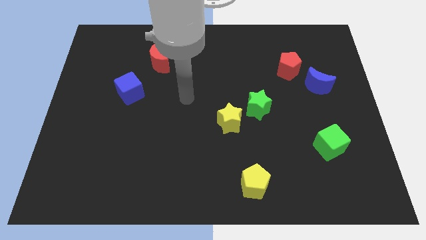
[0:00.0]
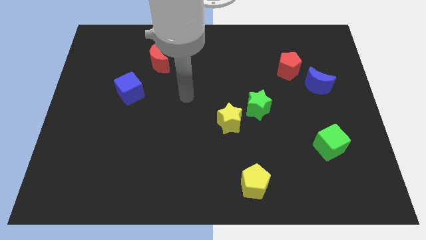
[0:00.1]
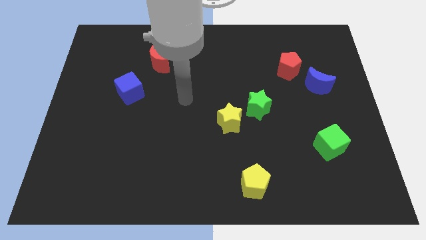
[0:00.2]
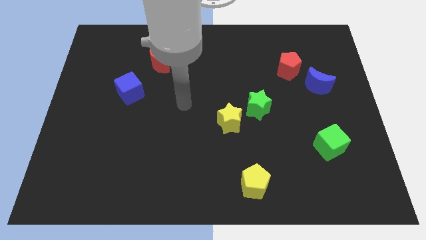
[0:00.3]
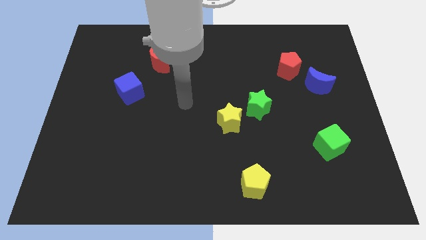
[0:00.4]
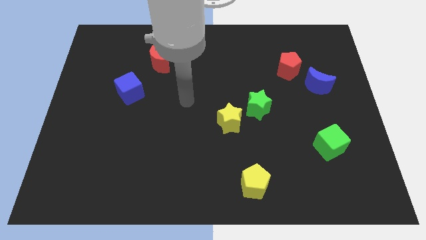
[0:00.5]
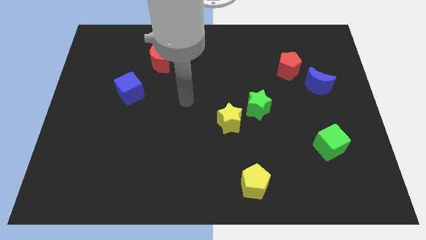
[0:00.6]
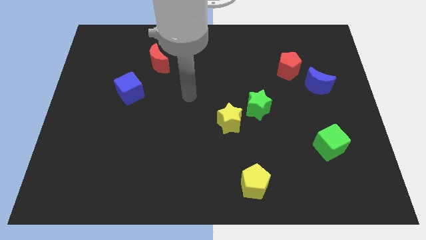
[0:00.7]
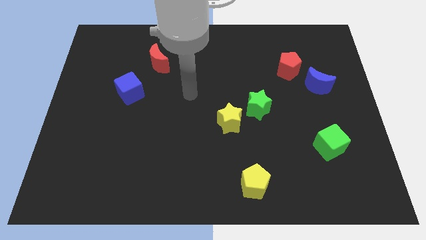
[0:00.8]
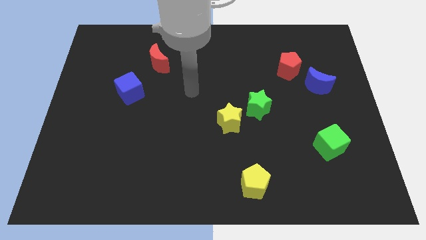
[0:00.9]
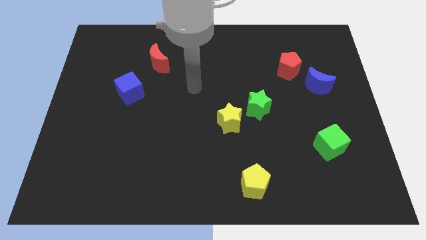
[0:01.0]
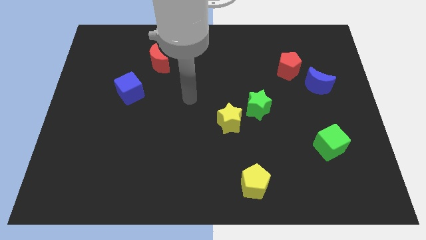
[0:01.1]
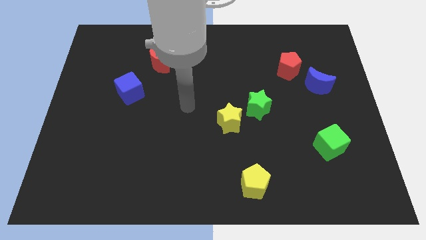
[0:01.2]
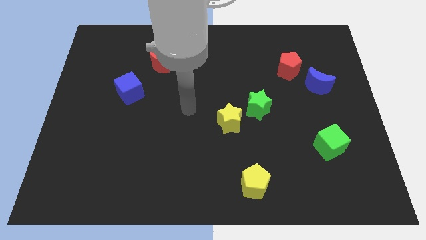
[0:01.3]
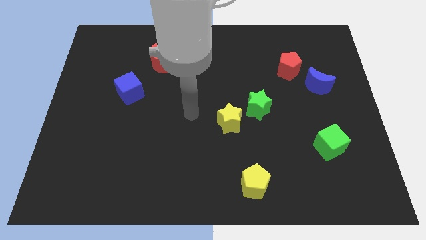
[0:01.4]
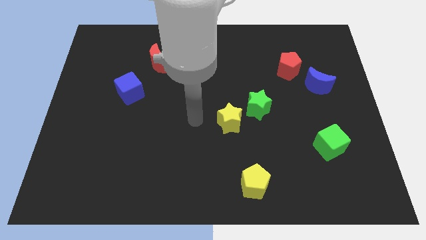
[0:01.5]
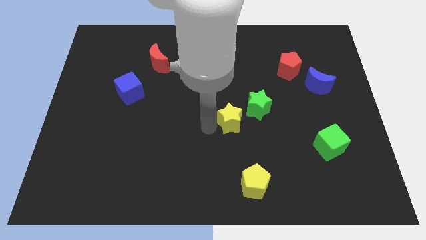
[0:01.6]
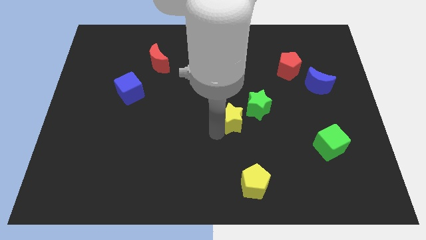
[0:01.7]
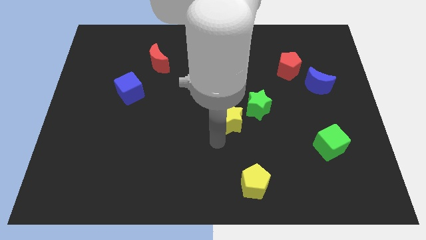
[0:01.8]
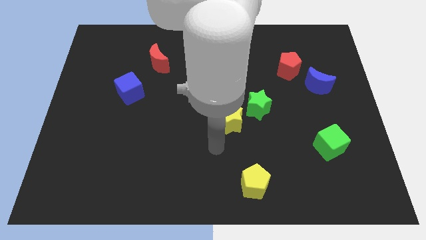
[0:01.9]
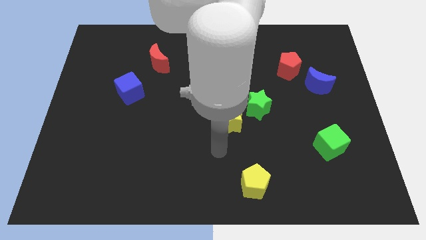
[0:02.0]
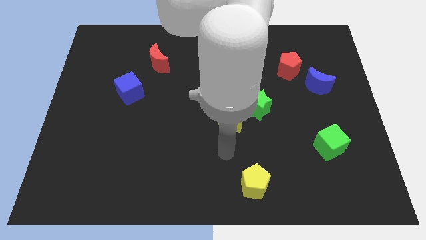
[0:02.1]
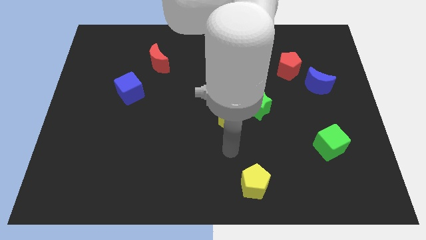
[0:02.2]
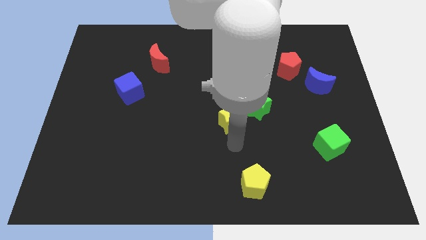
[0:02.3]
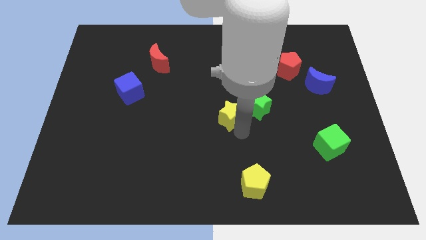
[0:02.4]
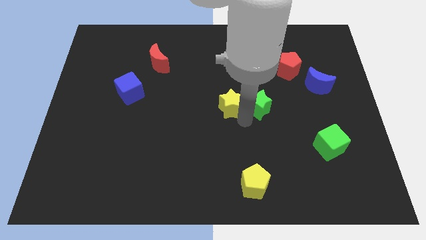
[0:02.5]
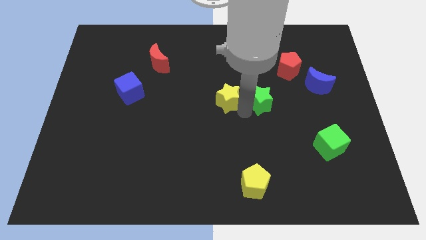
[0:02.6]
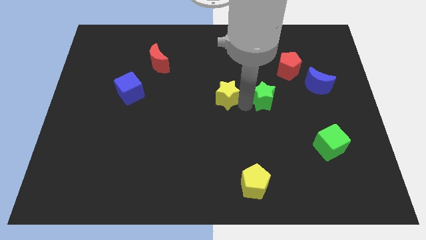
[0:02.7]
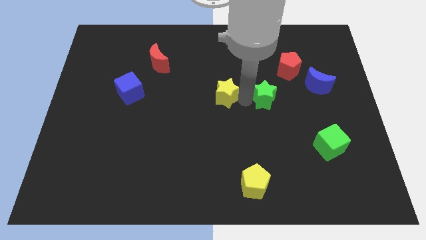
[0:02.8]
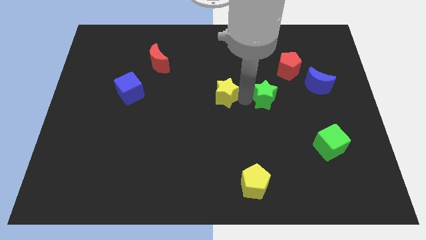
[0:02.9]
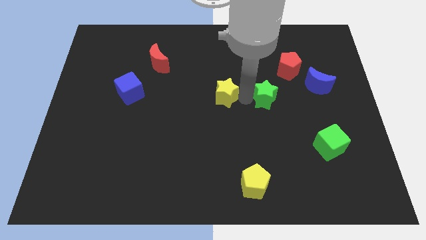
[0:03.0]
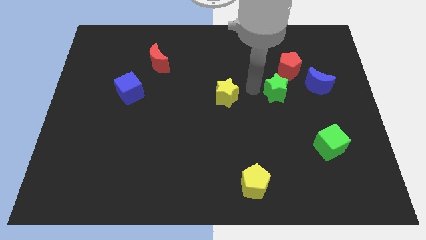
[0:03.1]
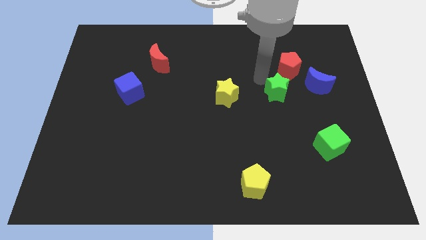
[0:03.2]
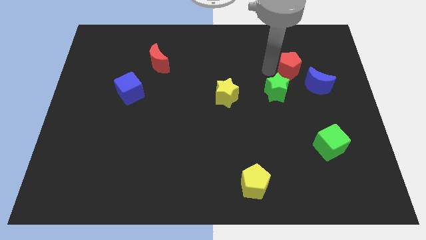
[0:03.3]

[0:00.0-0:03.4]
separate the green star and the yellow star

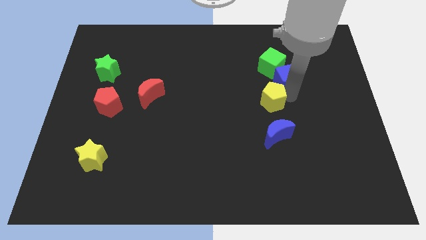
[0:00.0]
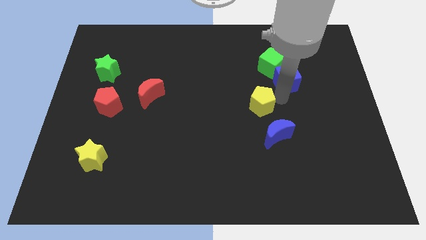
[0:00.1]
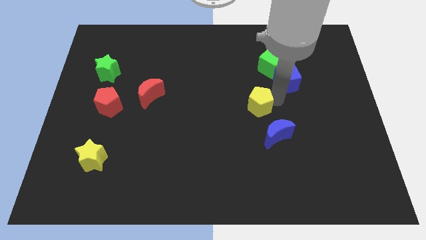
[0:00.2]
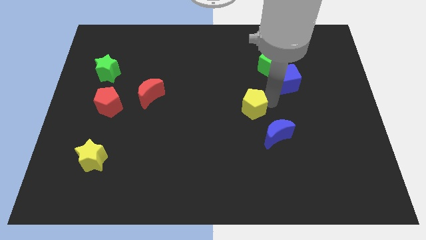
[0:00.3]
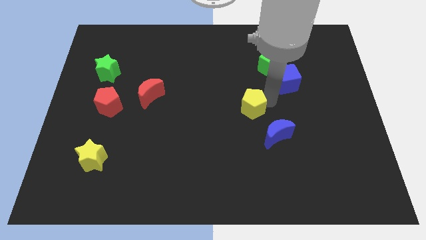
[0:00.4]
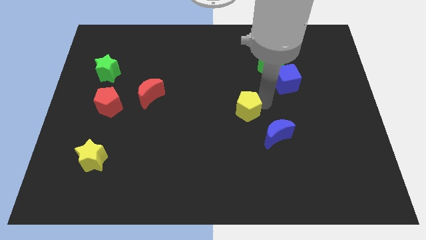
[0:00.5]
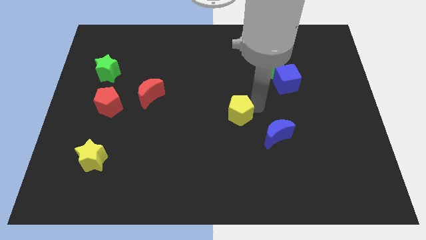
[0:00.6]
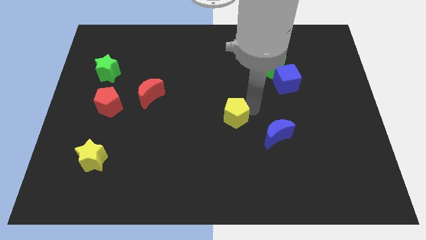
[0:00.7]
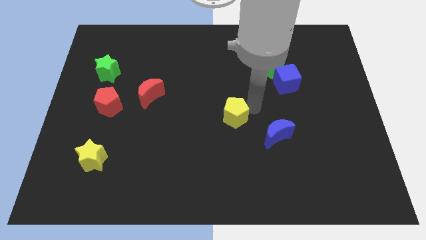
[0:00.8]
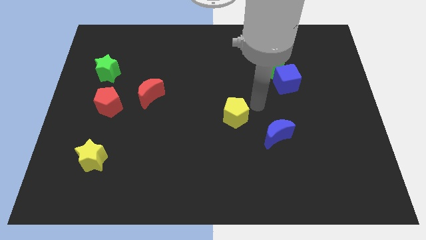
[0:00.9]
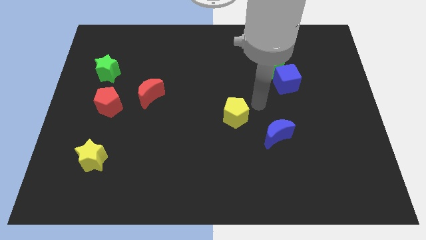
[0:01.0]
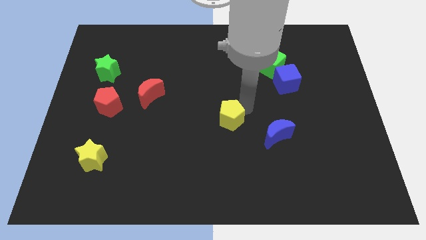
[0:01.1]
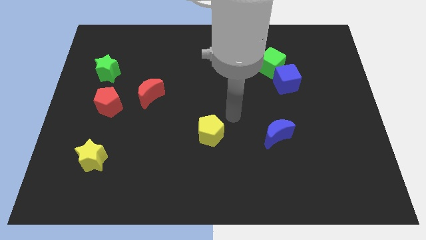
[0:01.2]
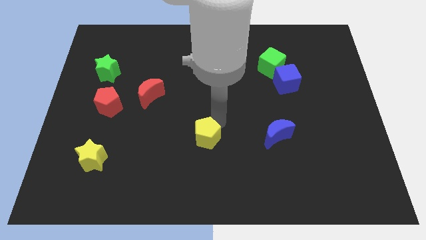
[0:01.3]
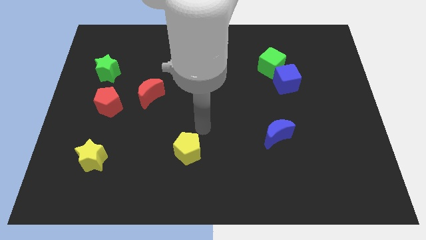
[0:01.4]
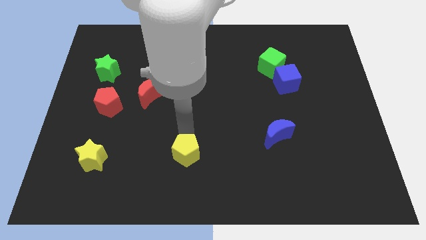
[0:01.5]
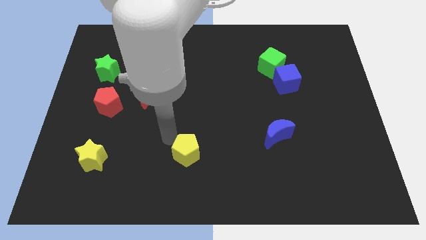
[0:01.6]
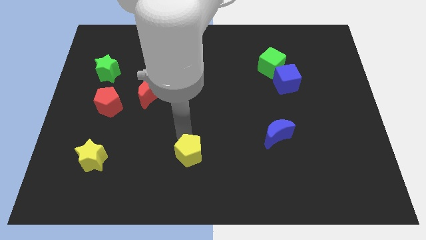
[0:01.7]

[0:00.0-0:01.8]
move the yellow pentagon to the right of yellow star

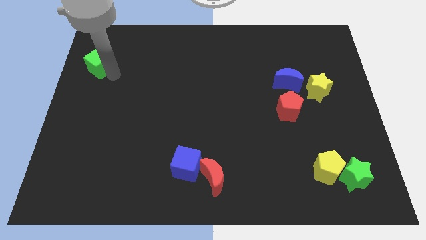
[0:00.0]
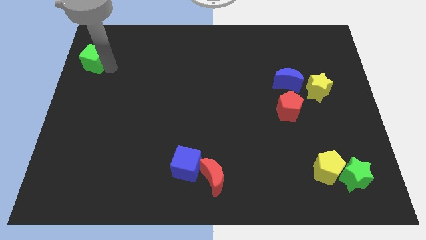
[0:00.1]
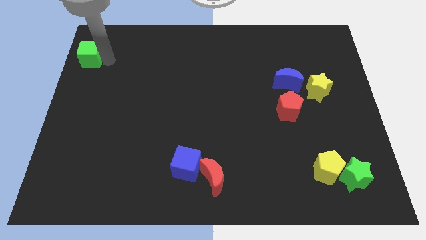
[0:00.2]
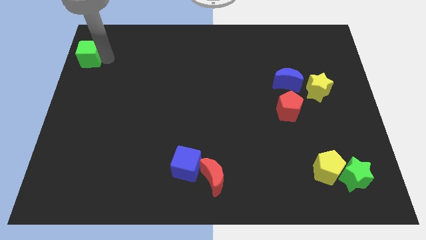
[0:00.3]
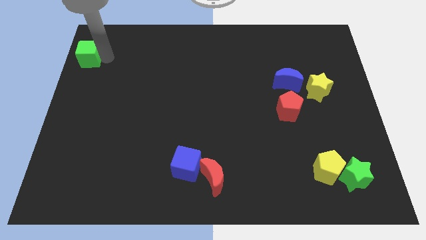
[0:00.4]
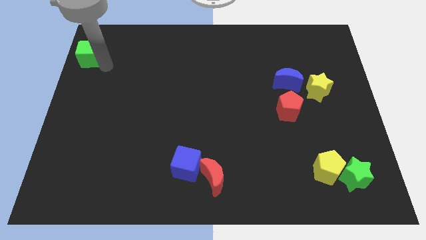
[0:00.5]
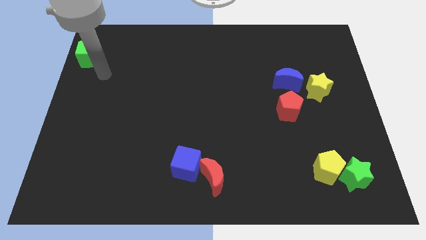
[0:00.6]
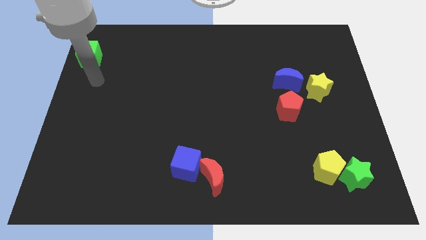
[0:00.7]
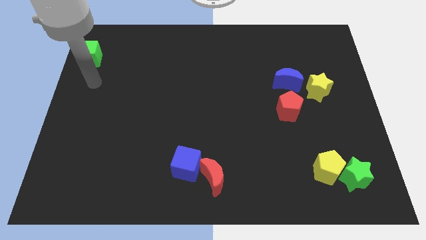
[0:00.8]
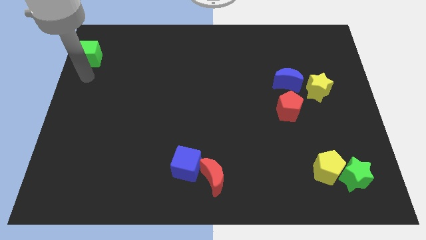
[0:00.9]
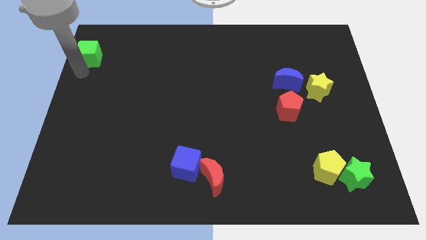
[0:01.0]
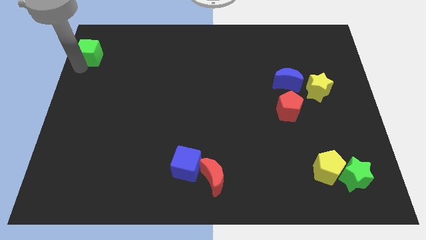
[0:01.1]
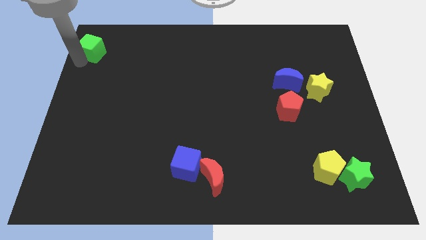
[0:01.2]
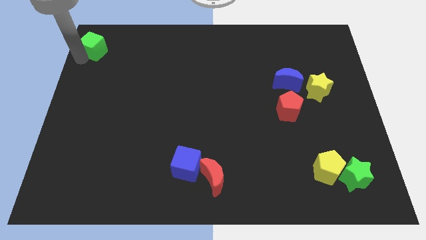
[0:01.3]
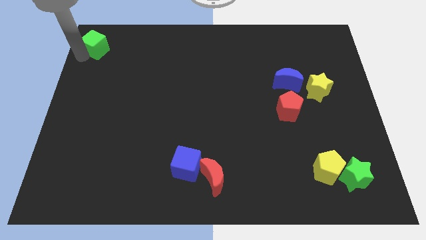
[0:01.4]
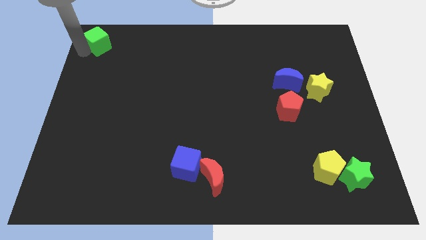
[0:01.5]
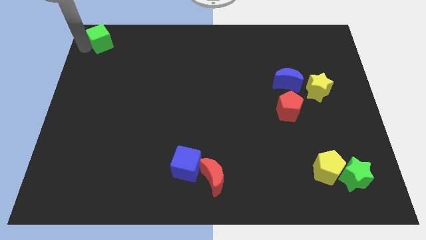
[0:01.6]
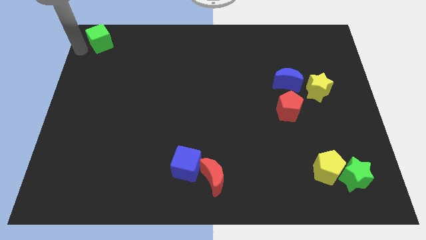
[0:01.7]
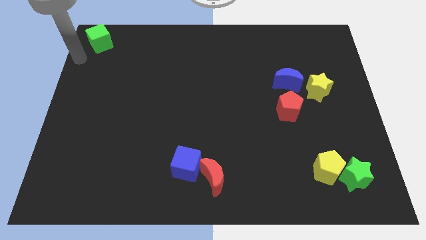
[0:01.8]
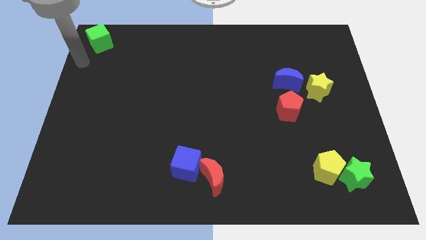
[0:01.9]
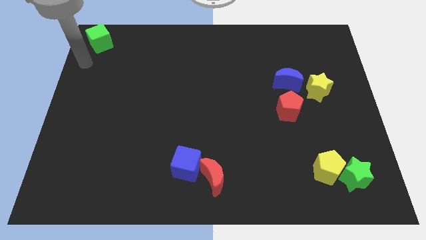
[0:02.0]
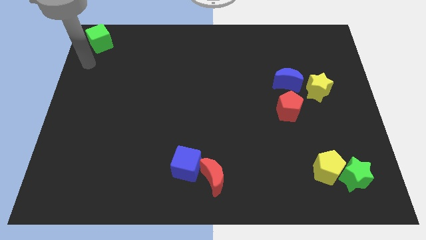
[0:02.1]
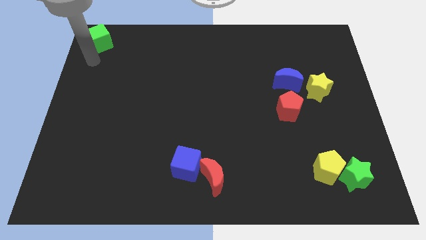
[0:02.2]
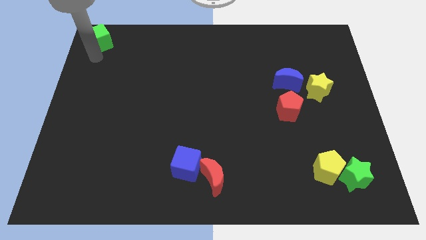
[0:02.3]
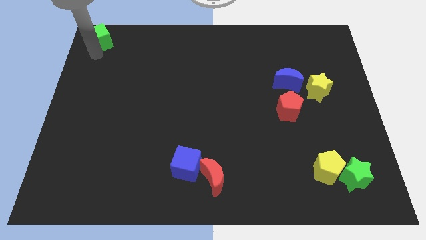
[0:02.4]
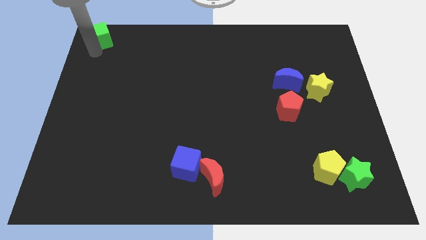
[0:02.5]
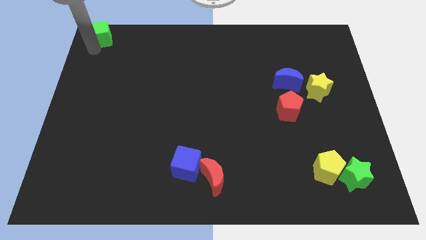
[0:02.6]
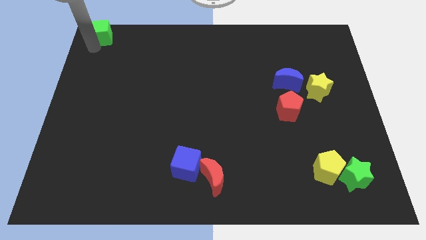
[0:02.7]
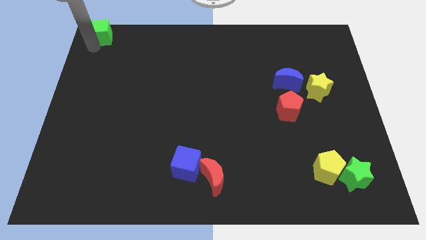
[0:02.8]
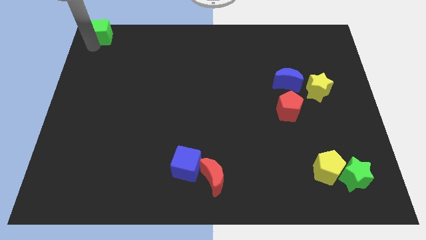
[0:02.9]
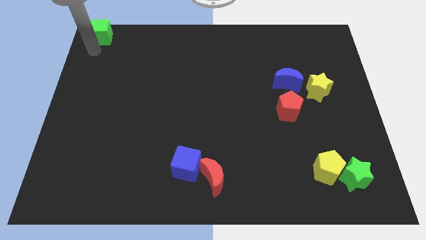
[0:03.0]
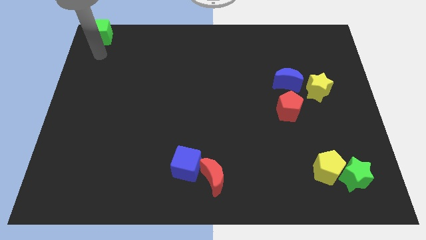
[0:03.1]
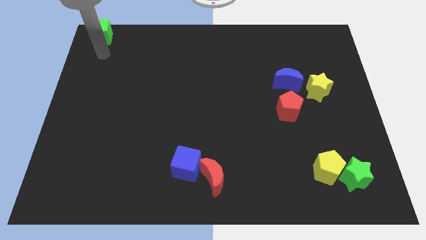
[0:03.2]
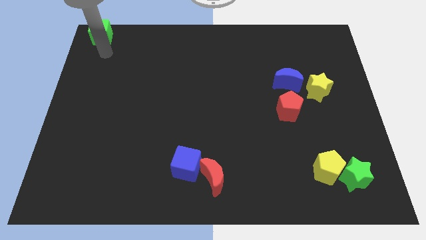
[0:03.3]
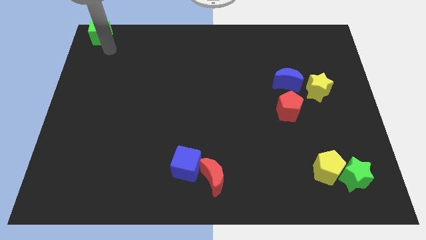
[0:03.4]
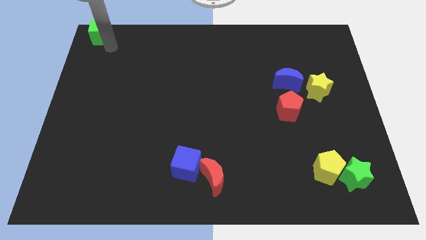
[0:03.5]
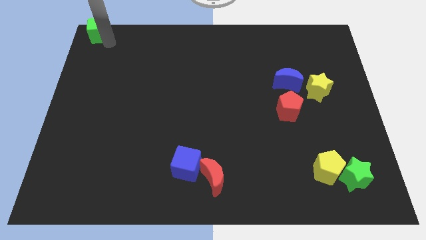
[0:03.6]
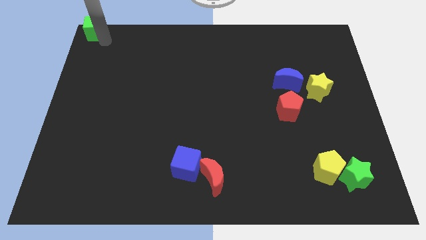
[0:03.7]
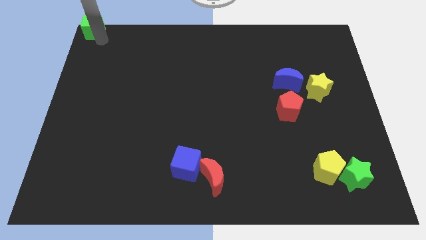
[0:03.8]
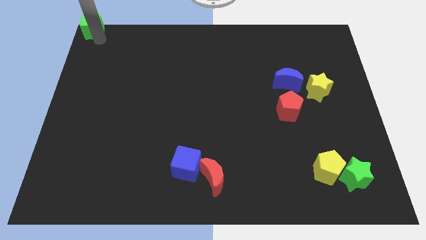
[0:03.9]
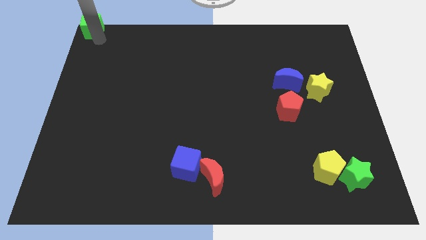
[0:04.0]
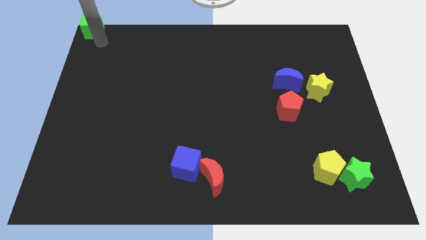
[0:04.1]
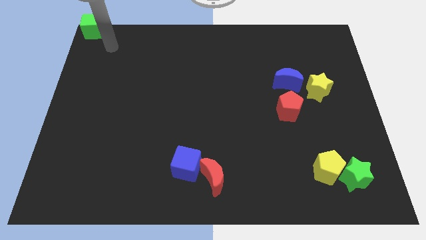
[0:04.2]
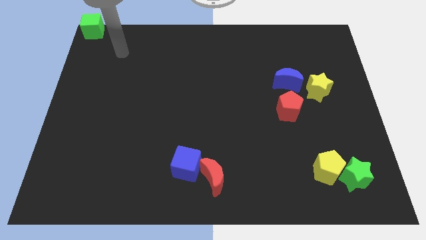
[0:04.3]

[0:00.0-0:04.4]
push the green cube to the top left corner
